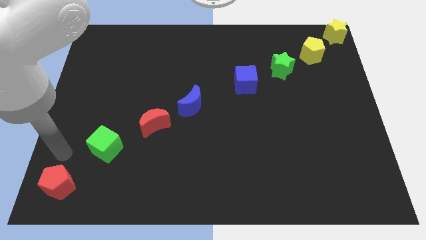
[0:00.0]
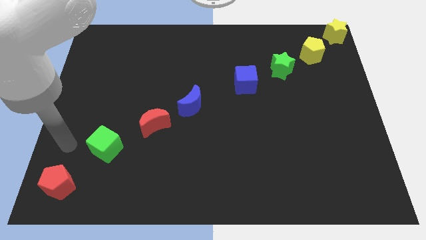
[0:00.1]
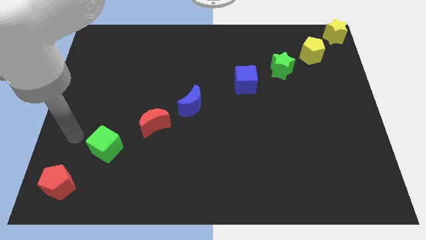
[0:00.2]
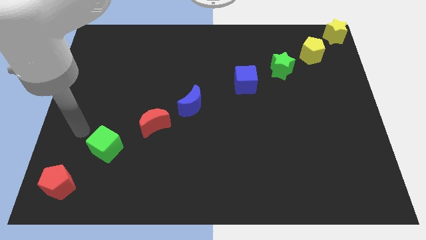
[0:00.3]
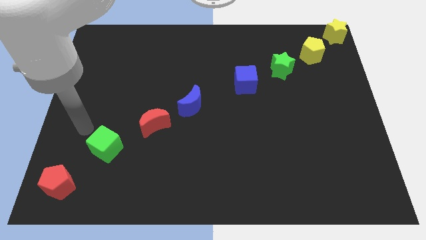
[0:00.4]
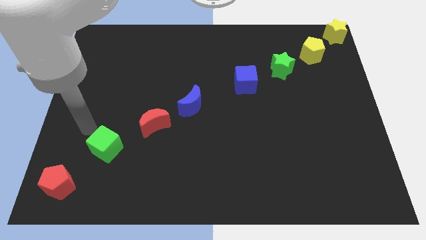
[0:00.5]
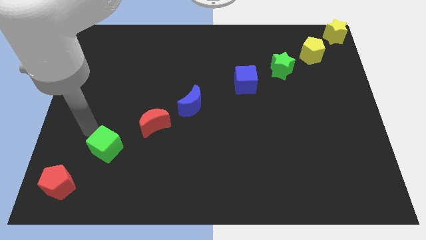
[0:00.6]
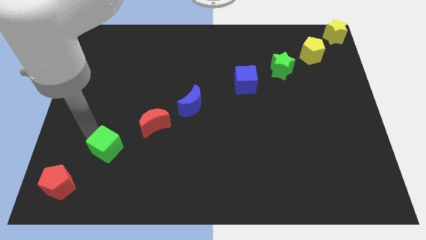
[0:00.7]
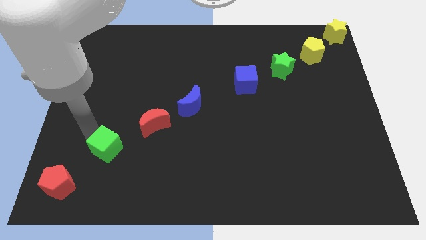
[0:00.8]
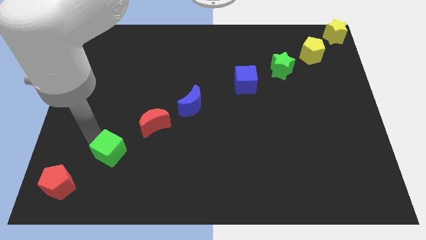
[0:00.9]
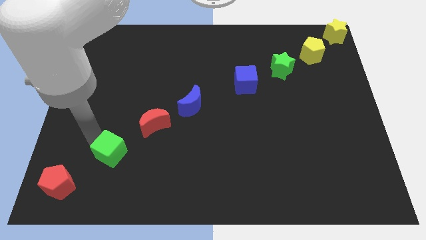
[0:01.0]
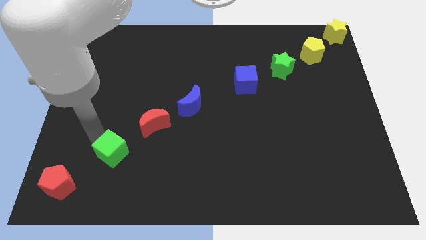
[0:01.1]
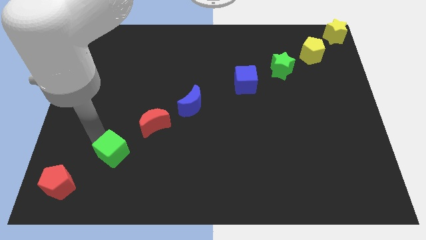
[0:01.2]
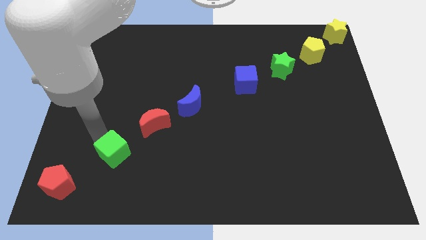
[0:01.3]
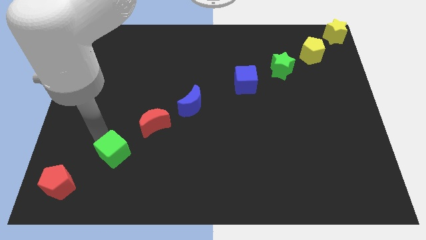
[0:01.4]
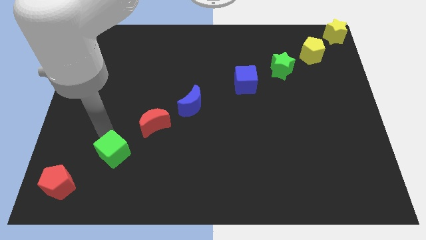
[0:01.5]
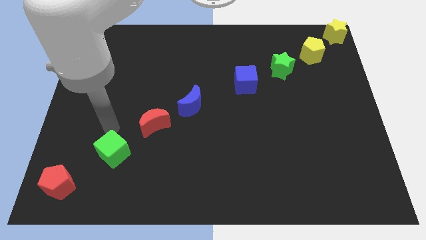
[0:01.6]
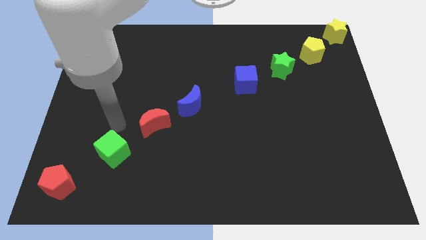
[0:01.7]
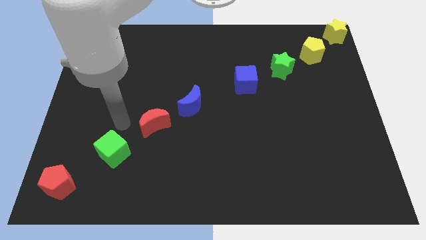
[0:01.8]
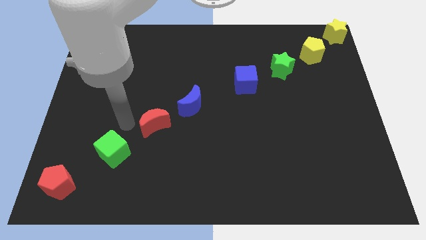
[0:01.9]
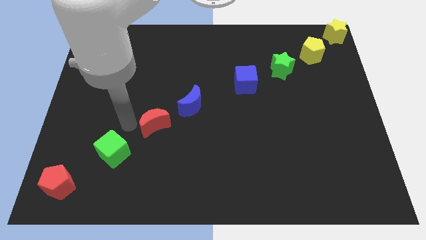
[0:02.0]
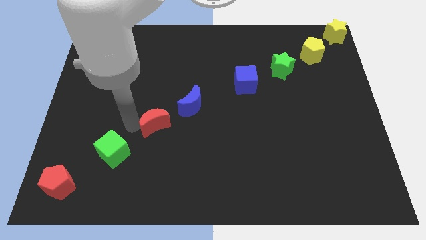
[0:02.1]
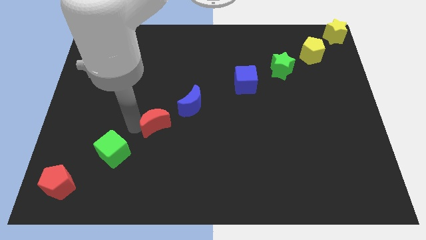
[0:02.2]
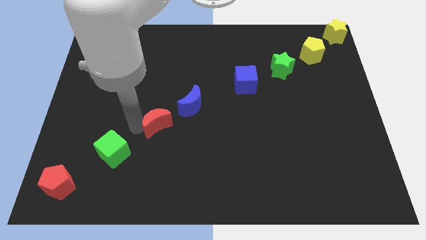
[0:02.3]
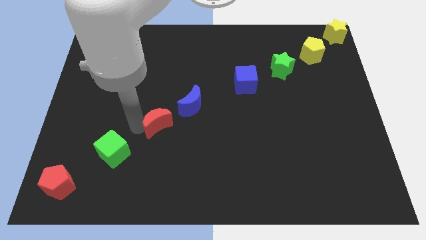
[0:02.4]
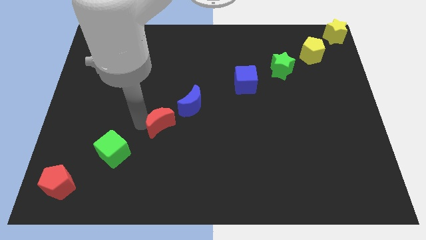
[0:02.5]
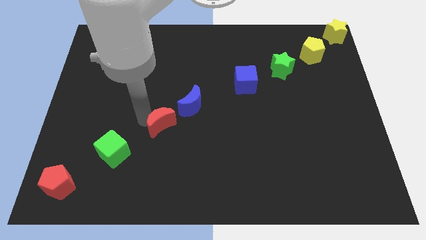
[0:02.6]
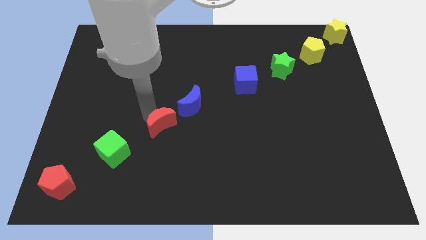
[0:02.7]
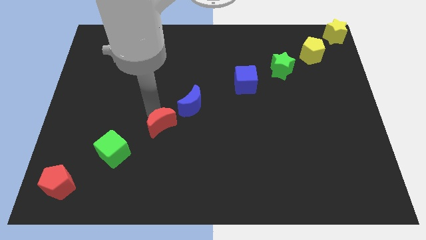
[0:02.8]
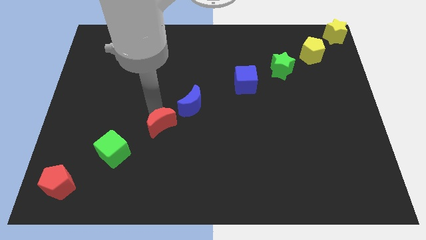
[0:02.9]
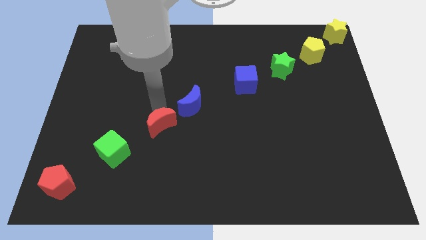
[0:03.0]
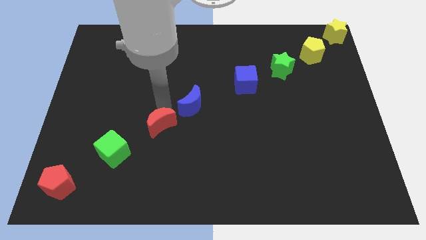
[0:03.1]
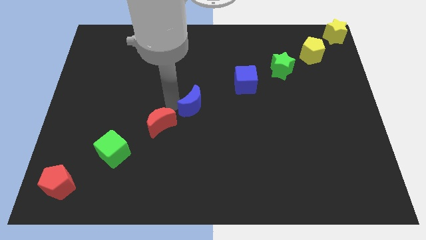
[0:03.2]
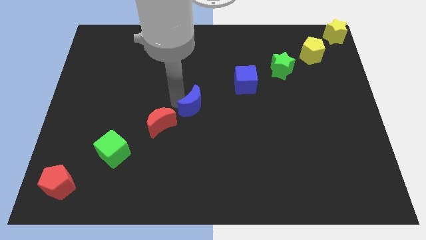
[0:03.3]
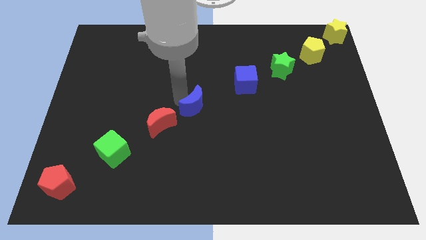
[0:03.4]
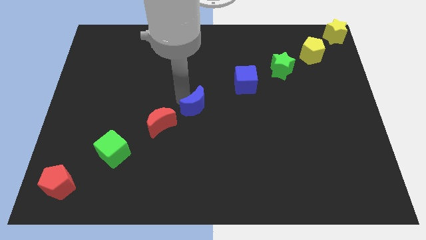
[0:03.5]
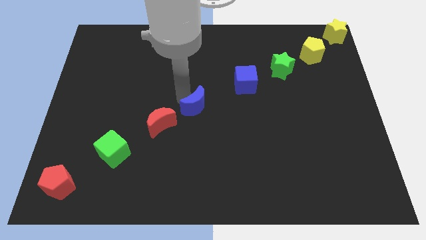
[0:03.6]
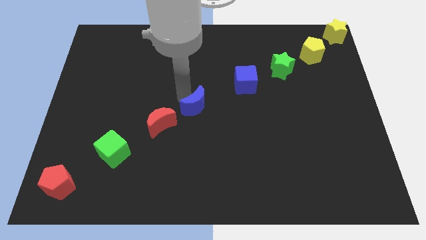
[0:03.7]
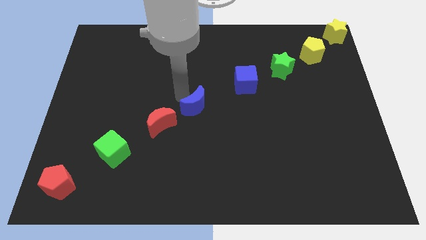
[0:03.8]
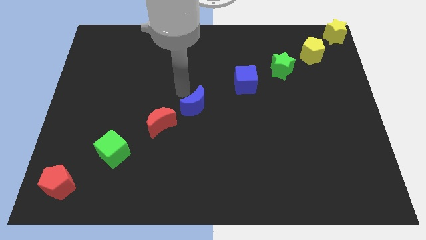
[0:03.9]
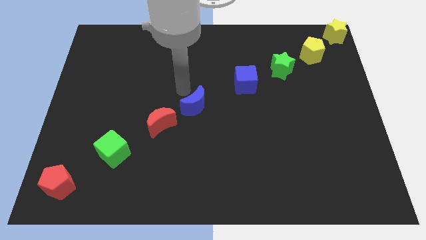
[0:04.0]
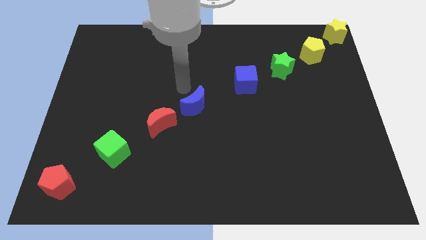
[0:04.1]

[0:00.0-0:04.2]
slide the red and blue moon to center

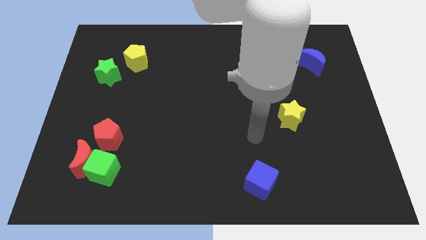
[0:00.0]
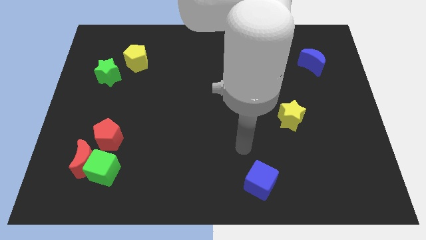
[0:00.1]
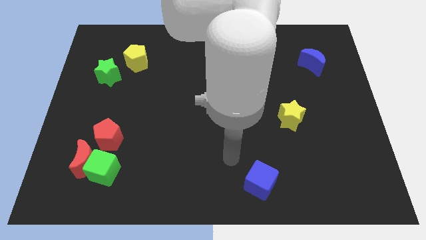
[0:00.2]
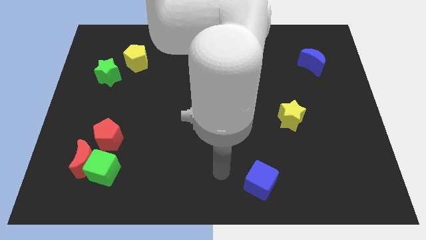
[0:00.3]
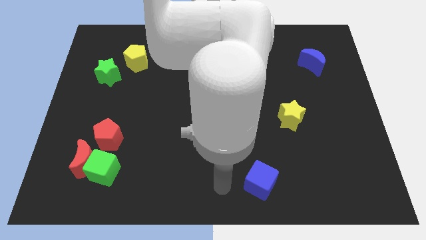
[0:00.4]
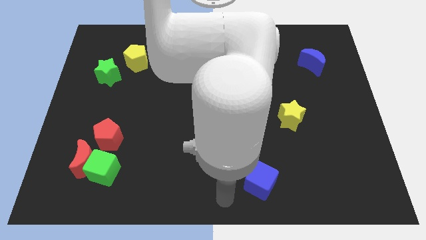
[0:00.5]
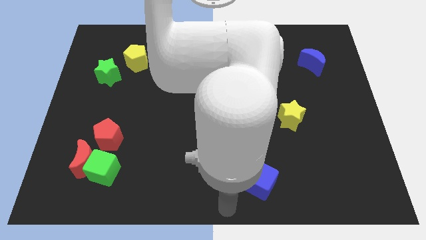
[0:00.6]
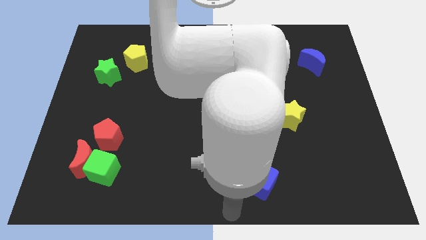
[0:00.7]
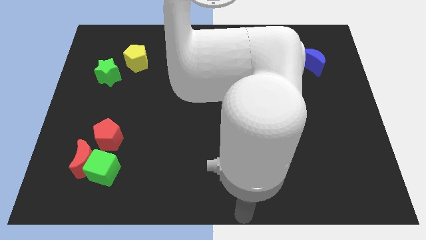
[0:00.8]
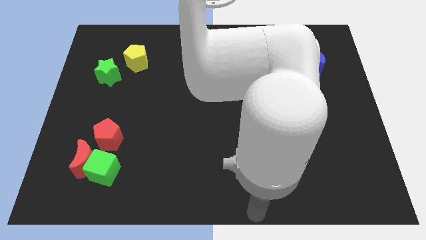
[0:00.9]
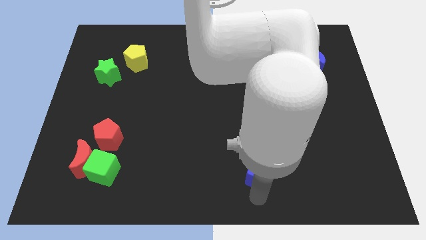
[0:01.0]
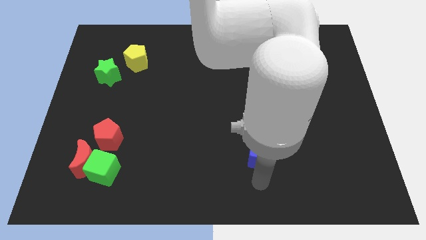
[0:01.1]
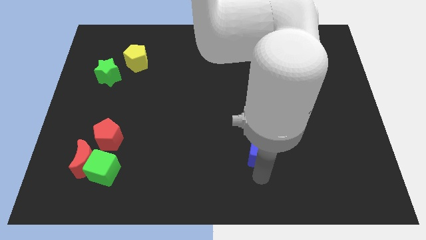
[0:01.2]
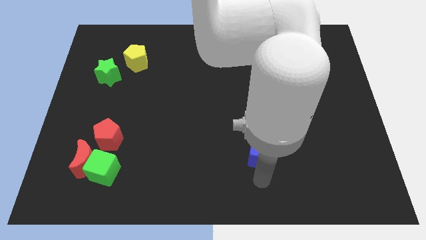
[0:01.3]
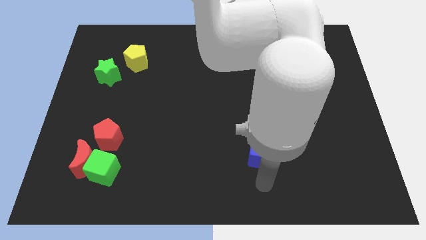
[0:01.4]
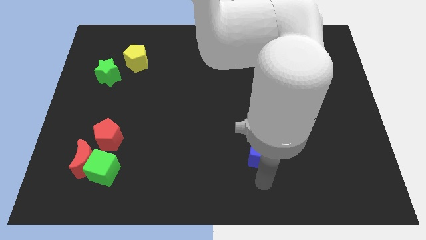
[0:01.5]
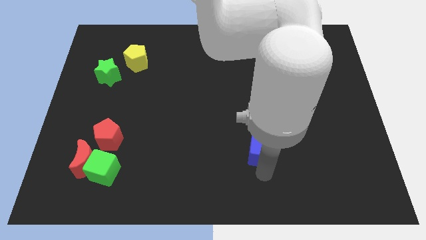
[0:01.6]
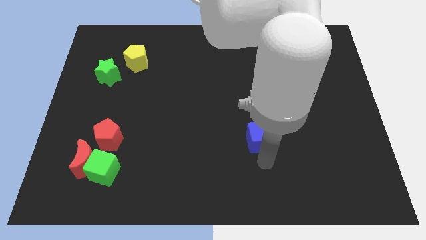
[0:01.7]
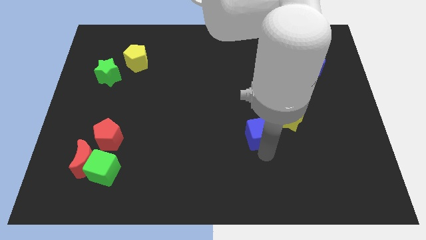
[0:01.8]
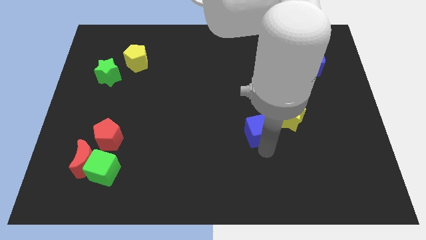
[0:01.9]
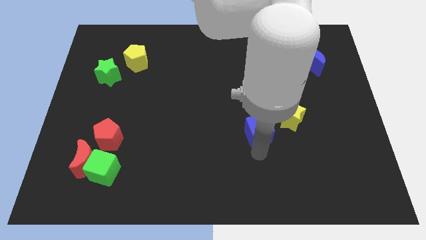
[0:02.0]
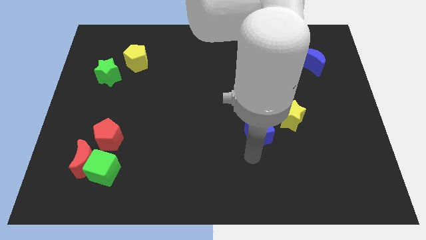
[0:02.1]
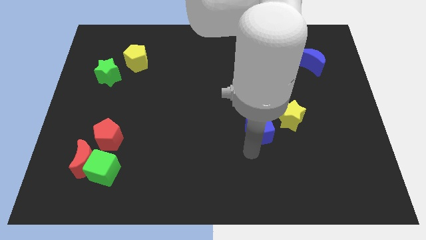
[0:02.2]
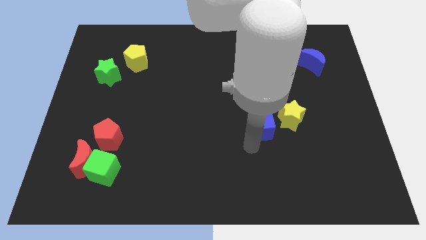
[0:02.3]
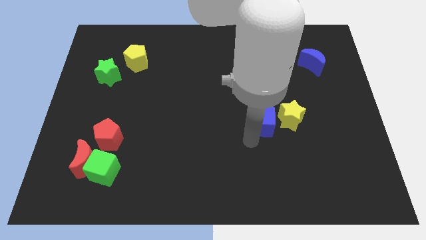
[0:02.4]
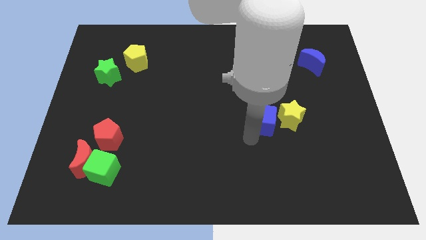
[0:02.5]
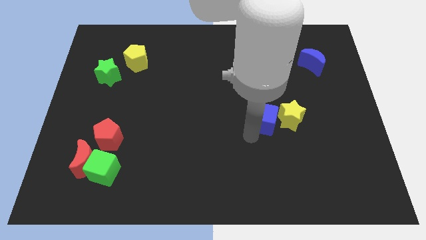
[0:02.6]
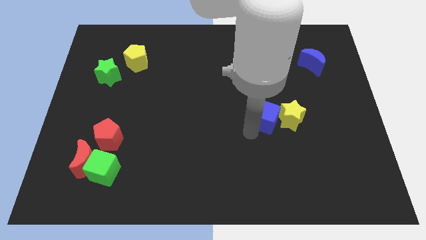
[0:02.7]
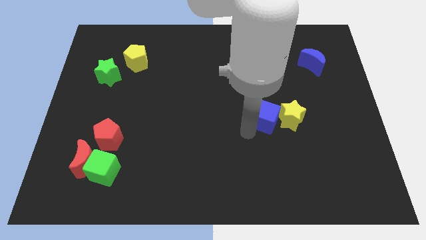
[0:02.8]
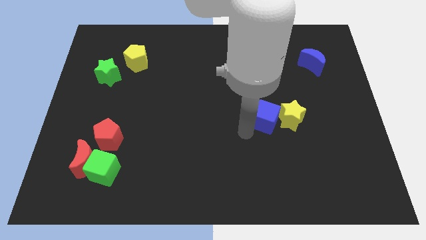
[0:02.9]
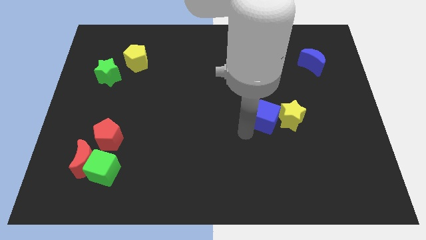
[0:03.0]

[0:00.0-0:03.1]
slide the blue cube into the left side of the yellow star

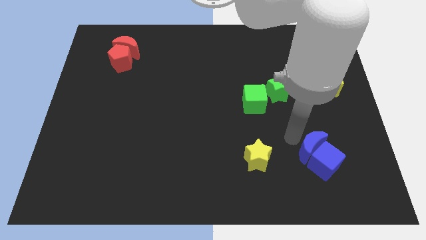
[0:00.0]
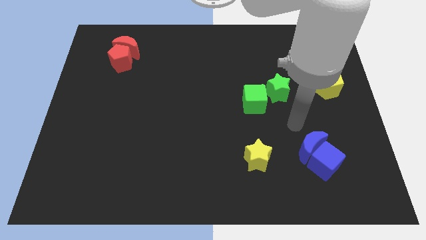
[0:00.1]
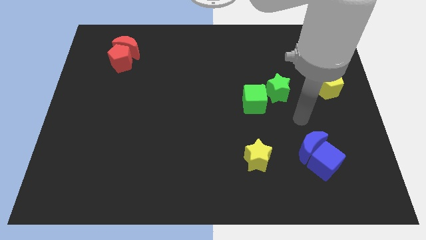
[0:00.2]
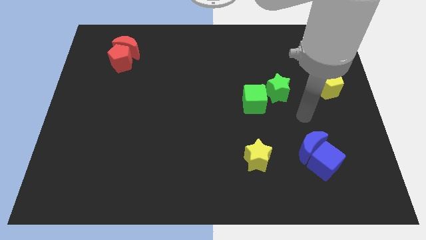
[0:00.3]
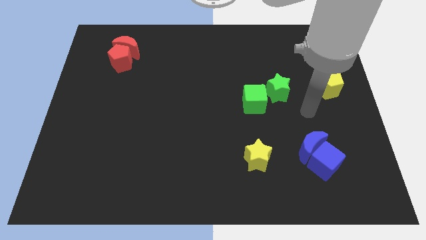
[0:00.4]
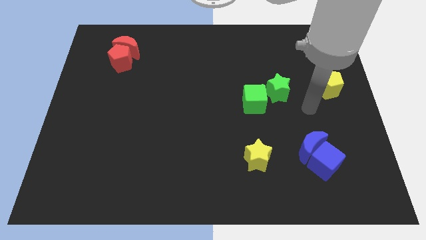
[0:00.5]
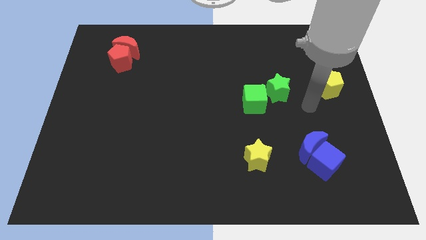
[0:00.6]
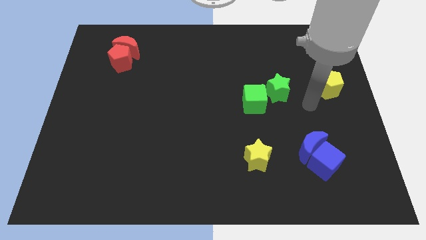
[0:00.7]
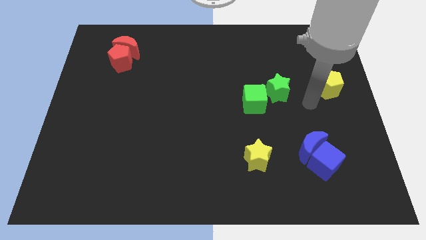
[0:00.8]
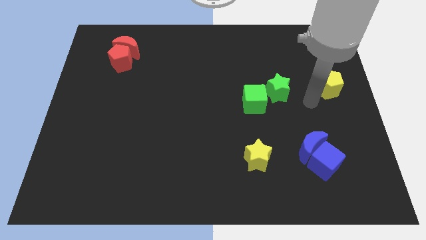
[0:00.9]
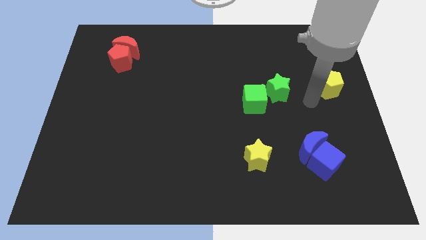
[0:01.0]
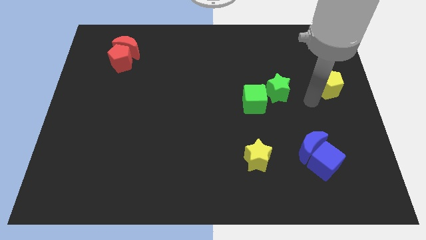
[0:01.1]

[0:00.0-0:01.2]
move the arm away from the blue crescent

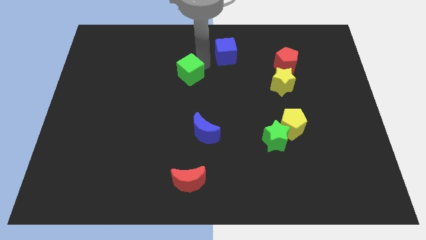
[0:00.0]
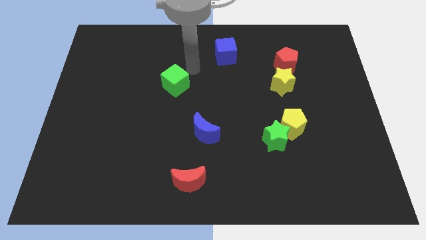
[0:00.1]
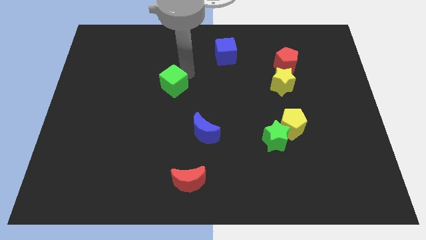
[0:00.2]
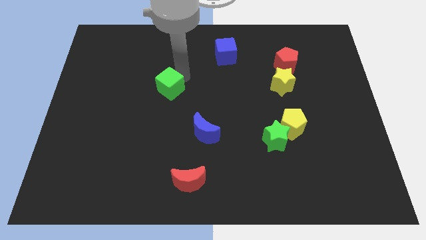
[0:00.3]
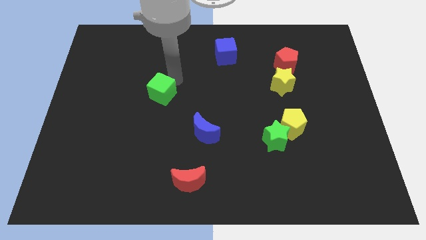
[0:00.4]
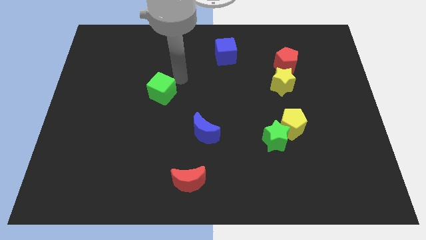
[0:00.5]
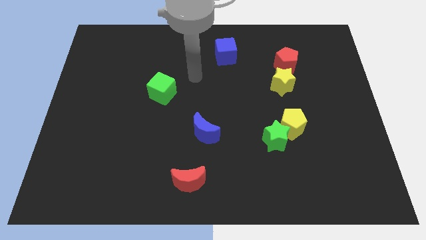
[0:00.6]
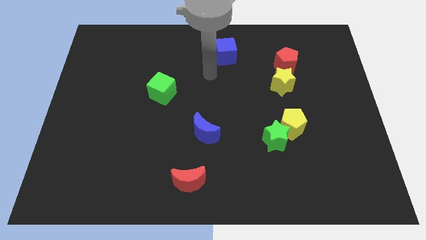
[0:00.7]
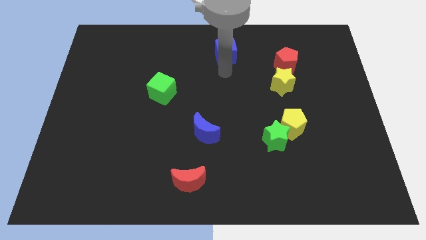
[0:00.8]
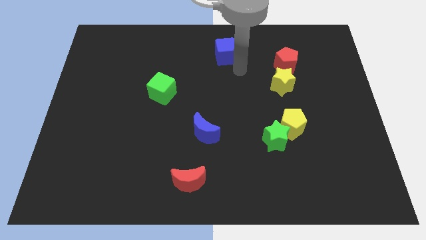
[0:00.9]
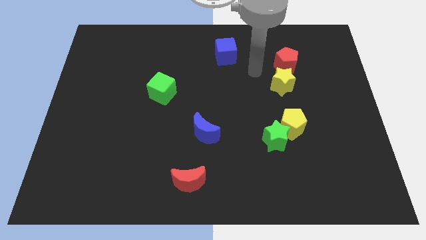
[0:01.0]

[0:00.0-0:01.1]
push green cube downwards
